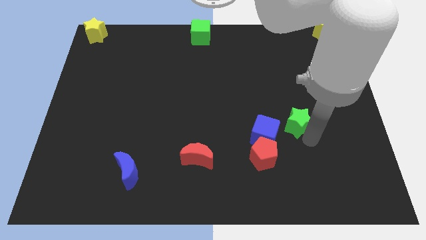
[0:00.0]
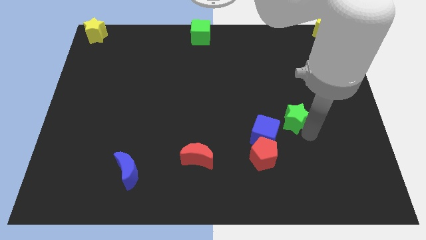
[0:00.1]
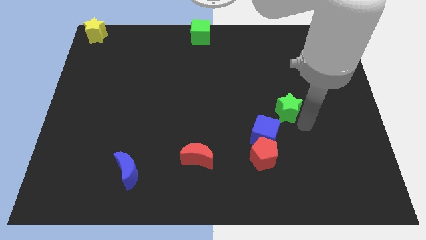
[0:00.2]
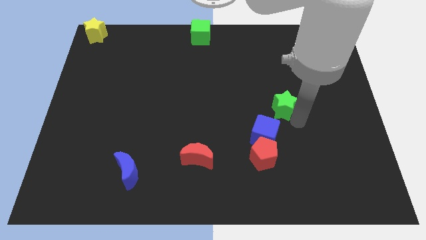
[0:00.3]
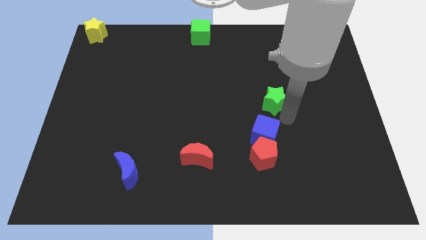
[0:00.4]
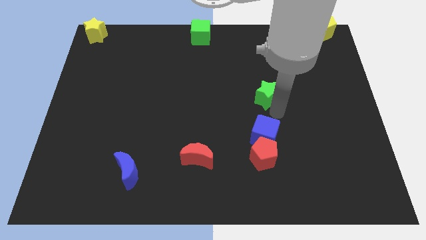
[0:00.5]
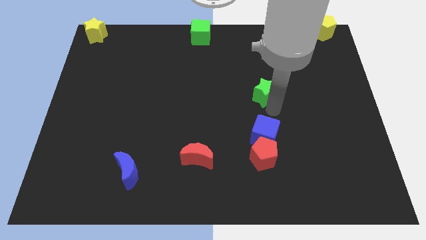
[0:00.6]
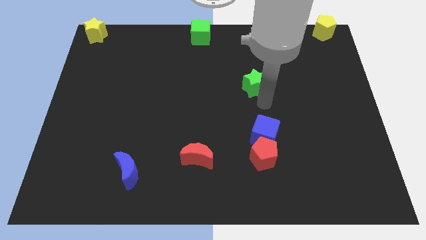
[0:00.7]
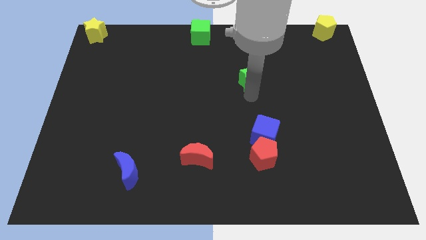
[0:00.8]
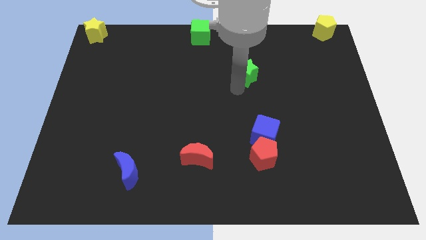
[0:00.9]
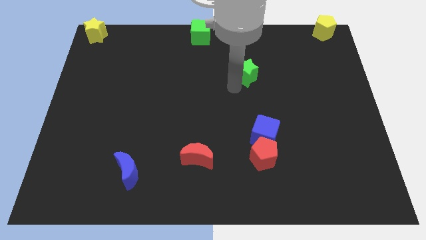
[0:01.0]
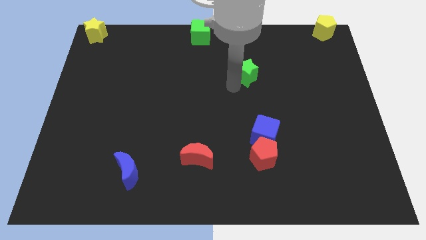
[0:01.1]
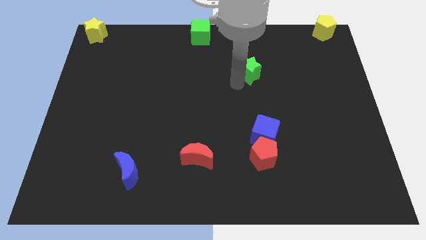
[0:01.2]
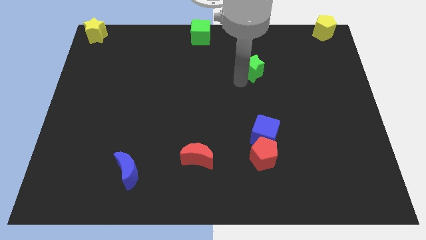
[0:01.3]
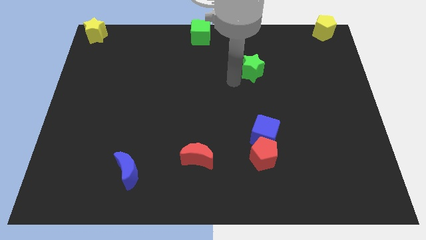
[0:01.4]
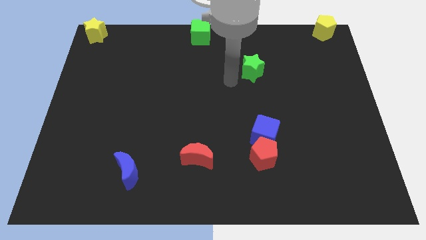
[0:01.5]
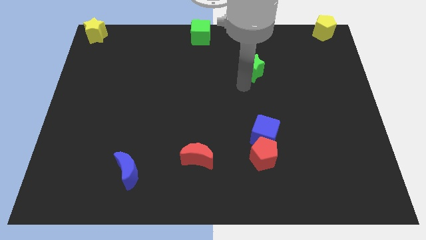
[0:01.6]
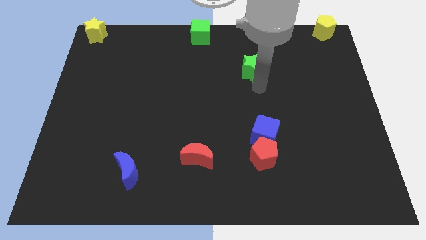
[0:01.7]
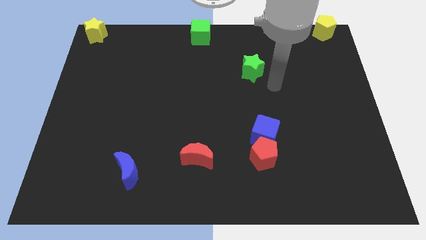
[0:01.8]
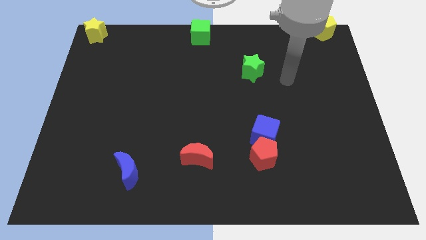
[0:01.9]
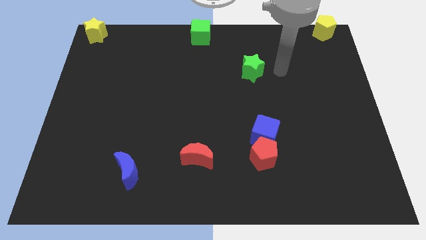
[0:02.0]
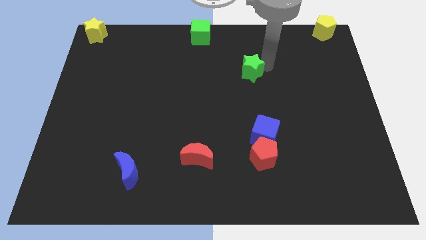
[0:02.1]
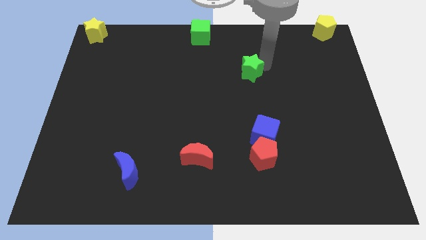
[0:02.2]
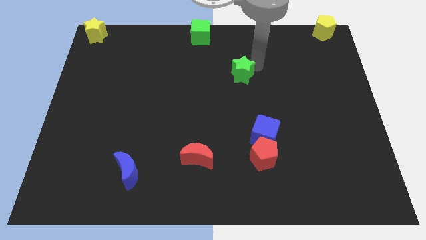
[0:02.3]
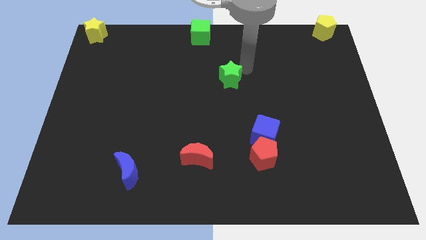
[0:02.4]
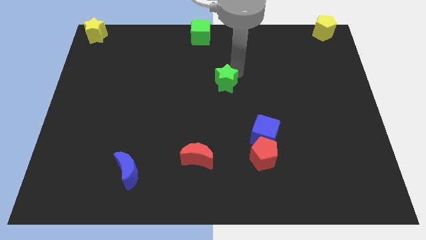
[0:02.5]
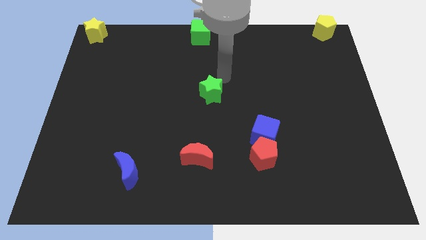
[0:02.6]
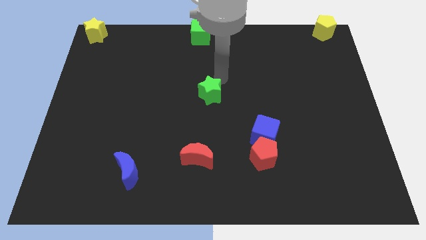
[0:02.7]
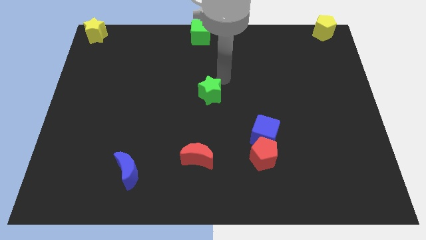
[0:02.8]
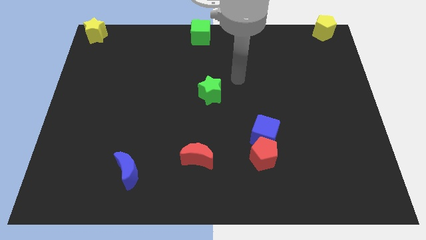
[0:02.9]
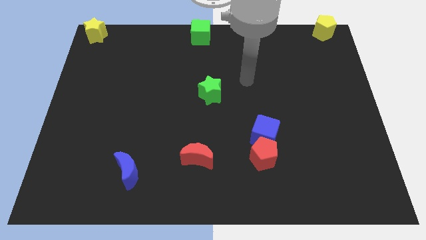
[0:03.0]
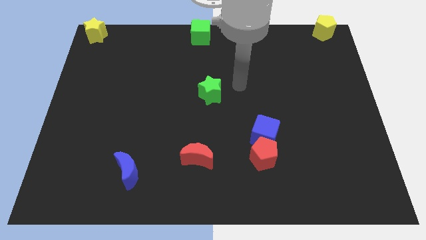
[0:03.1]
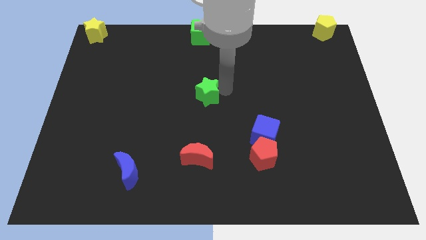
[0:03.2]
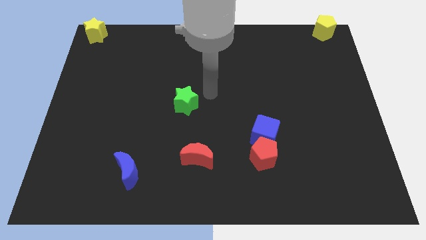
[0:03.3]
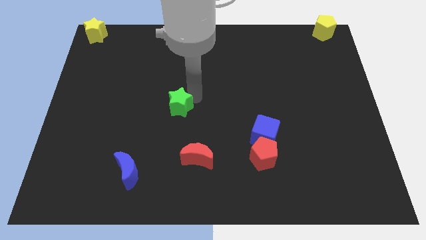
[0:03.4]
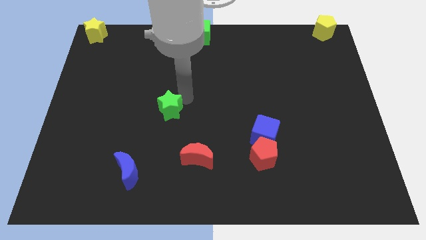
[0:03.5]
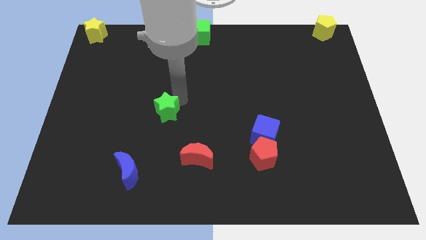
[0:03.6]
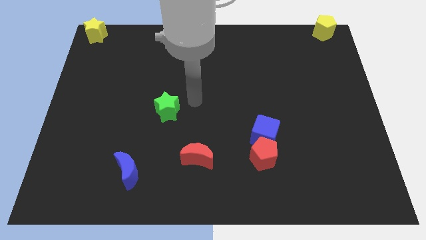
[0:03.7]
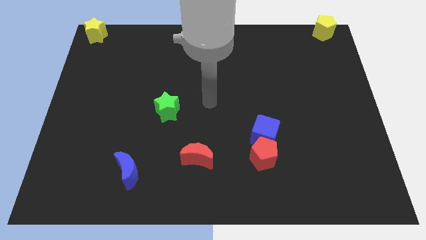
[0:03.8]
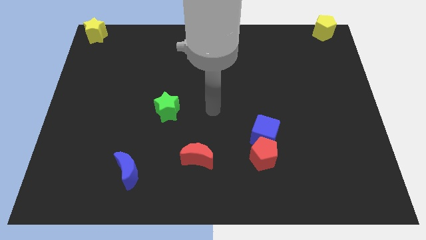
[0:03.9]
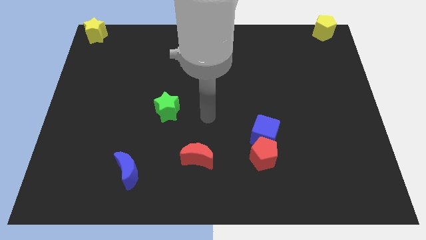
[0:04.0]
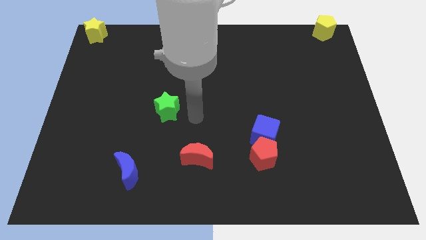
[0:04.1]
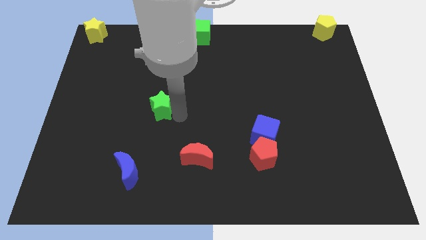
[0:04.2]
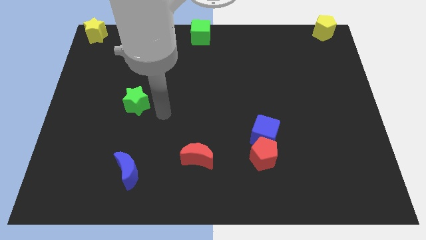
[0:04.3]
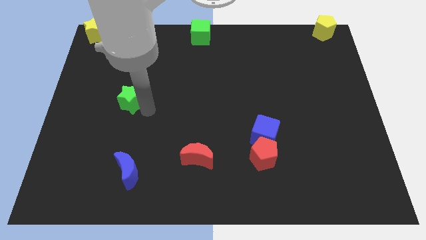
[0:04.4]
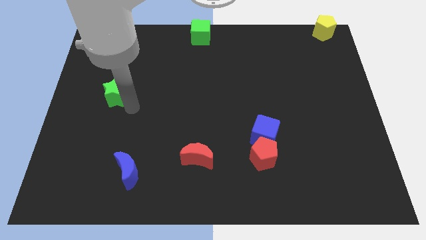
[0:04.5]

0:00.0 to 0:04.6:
push the green star to the top left side of the blue crescent

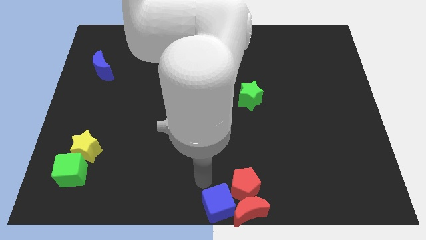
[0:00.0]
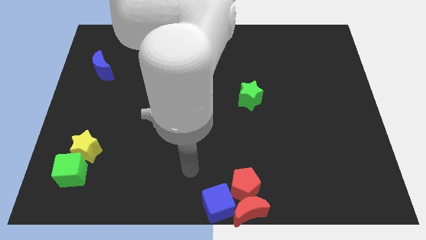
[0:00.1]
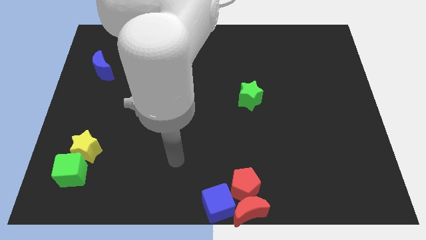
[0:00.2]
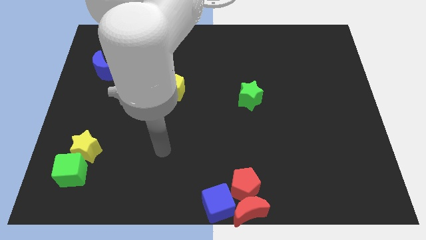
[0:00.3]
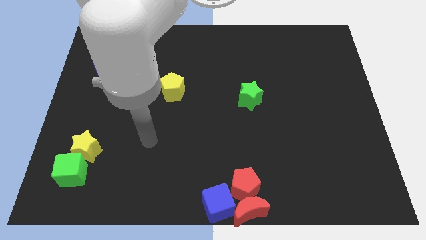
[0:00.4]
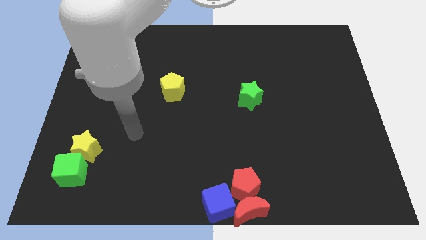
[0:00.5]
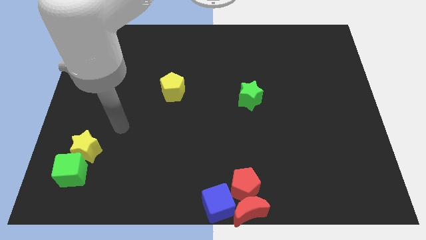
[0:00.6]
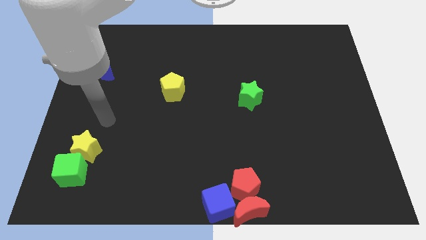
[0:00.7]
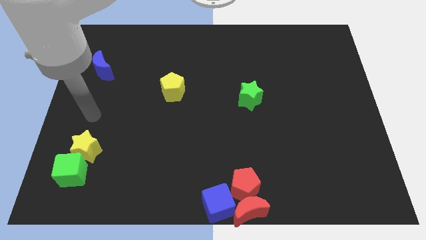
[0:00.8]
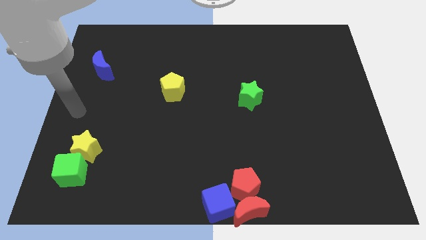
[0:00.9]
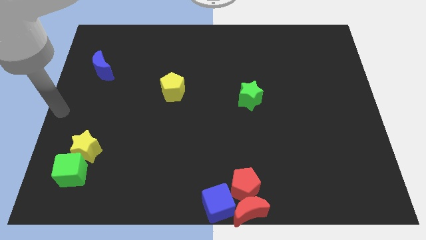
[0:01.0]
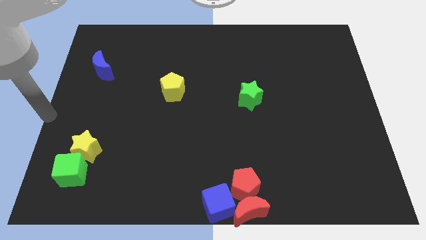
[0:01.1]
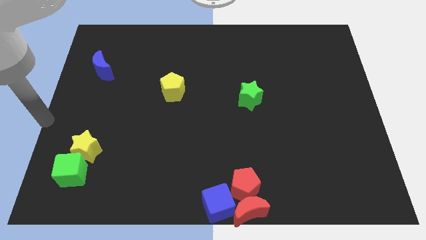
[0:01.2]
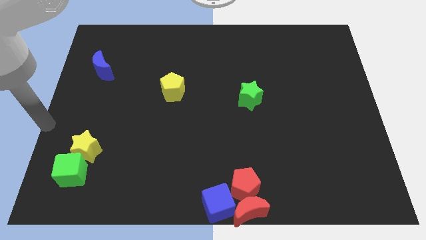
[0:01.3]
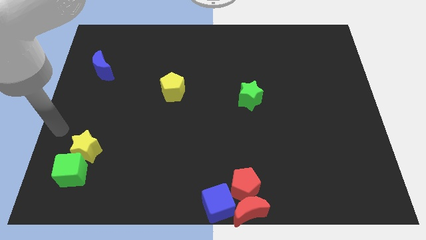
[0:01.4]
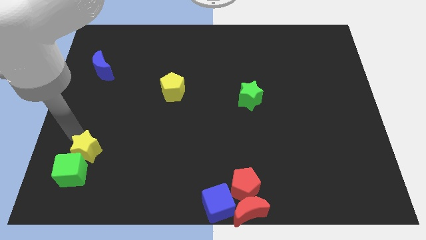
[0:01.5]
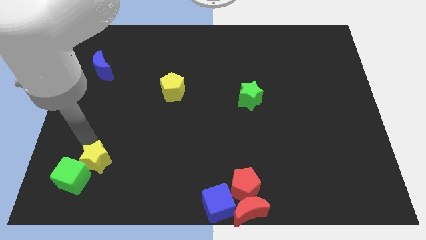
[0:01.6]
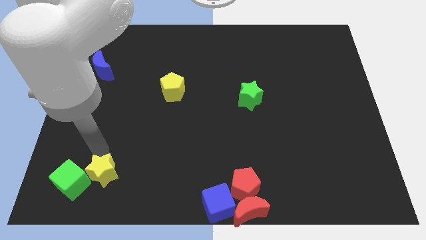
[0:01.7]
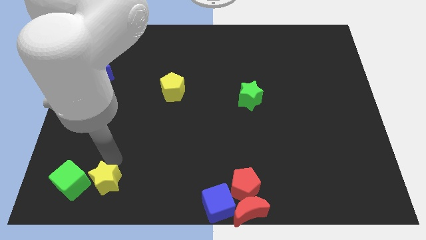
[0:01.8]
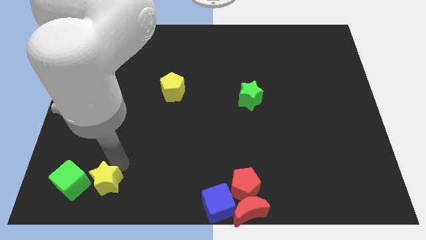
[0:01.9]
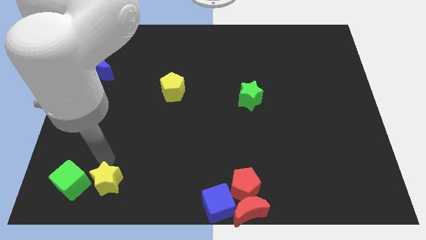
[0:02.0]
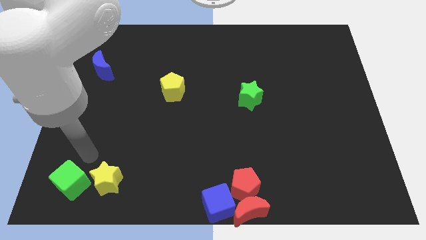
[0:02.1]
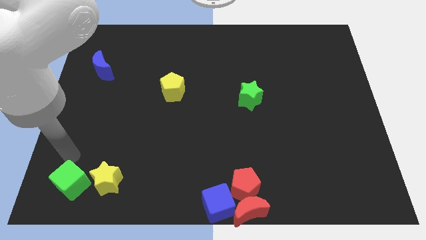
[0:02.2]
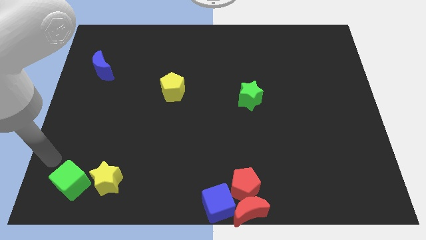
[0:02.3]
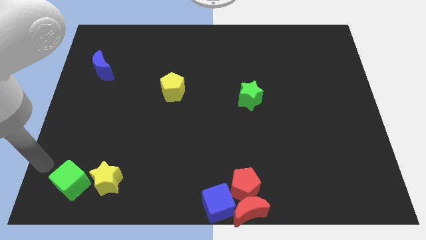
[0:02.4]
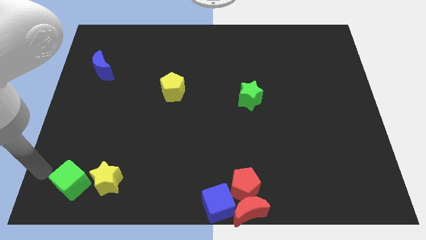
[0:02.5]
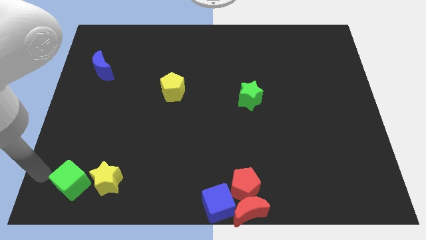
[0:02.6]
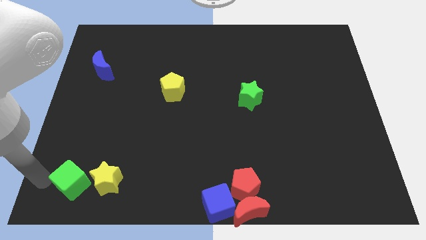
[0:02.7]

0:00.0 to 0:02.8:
move the yellow star to the right of the green cube

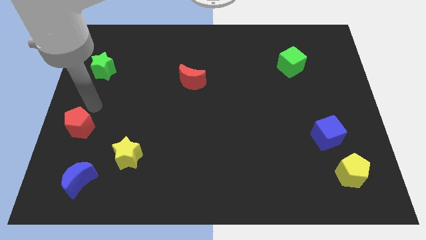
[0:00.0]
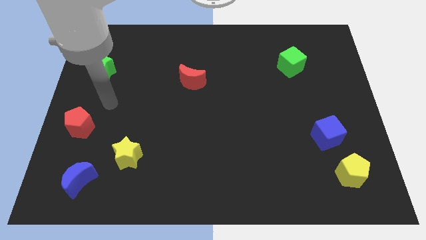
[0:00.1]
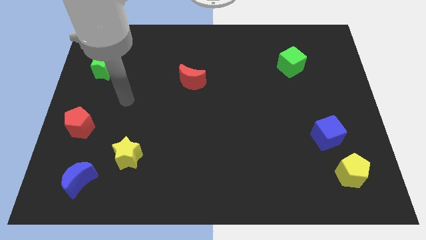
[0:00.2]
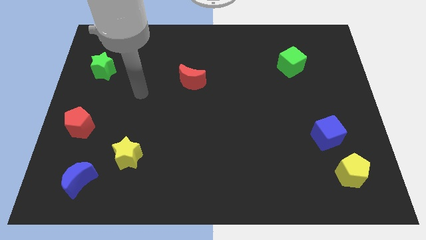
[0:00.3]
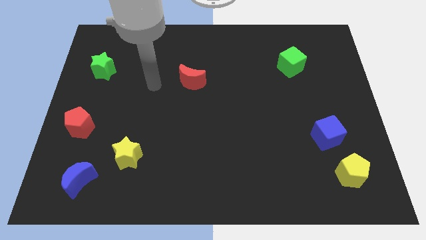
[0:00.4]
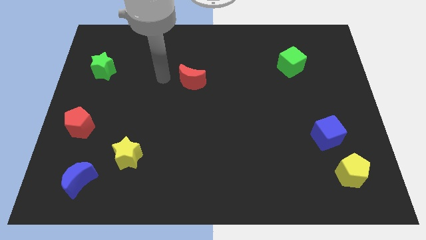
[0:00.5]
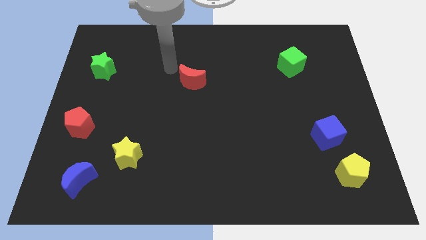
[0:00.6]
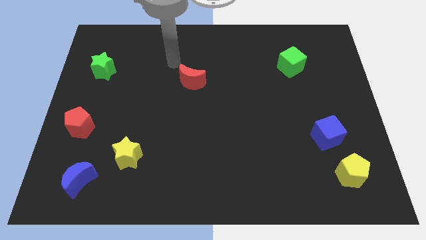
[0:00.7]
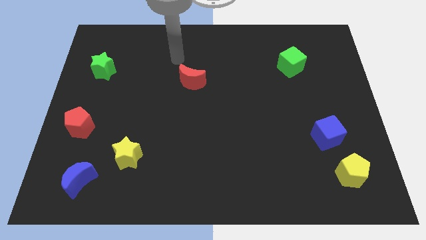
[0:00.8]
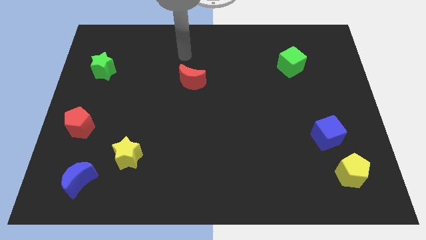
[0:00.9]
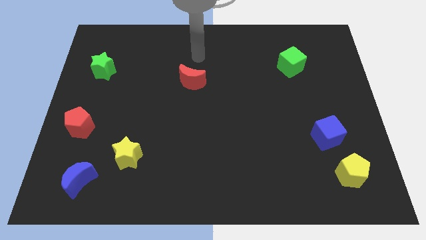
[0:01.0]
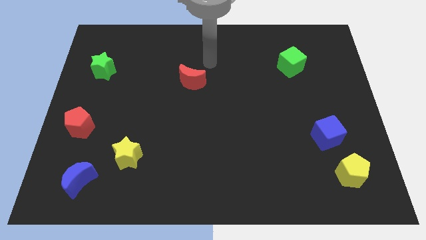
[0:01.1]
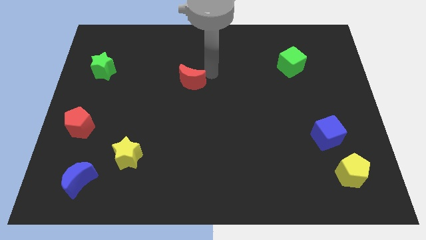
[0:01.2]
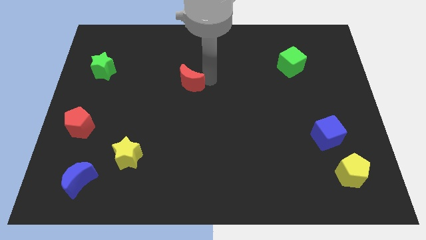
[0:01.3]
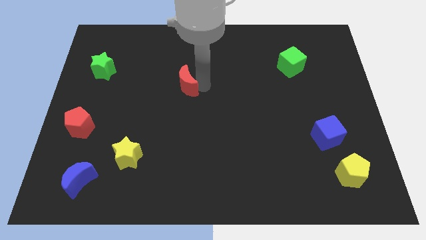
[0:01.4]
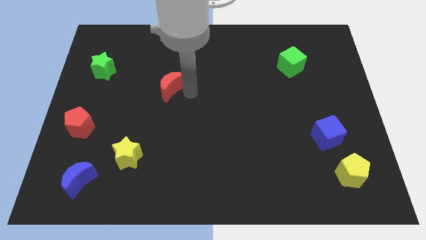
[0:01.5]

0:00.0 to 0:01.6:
move red crescent slightly towards left side
